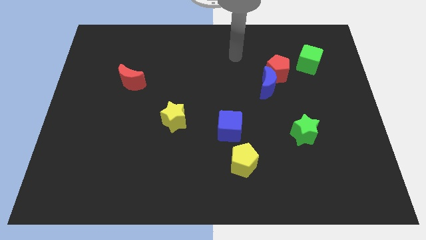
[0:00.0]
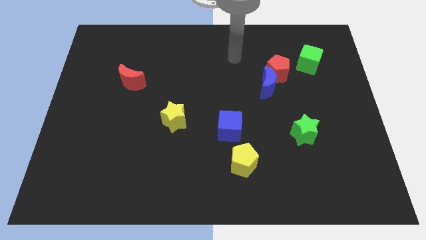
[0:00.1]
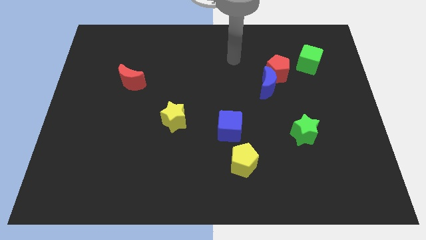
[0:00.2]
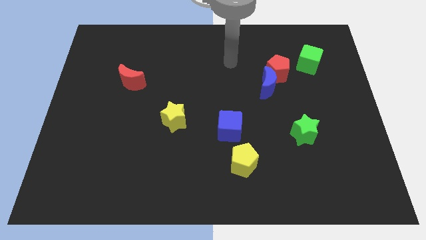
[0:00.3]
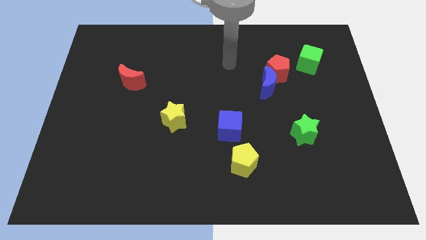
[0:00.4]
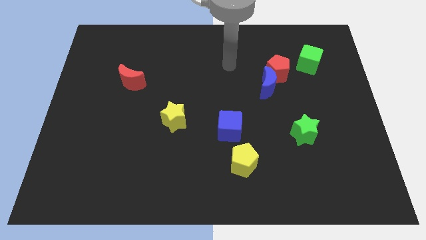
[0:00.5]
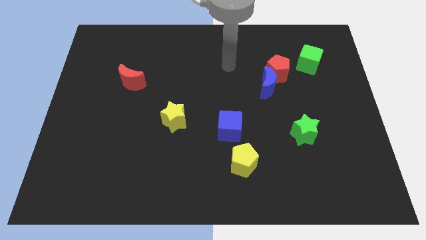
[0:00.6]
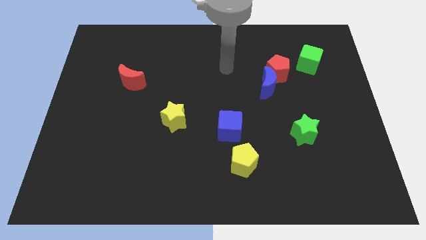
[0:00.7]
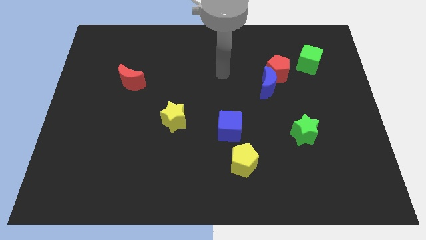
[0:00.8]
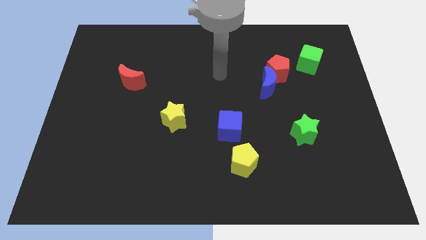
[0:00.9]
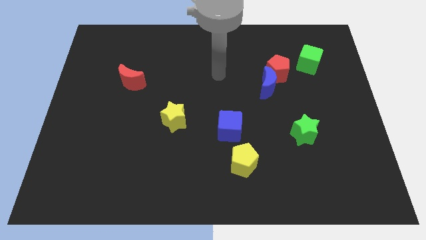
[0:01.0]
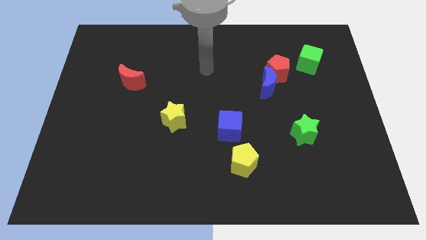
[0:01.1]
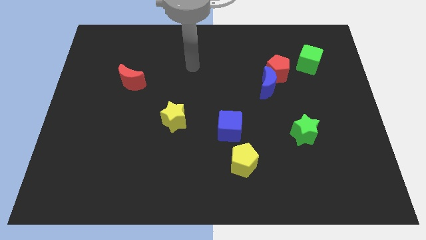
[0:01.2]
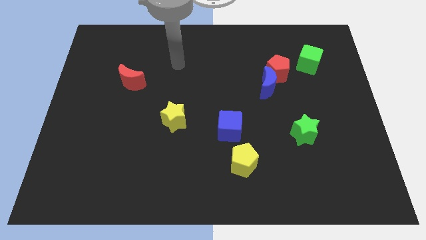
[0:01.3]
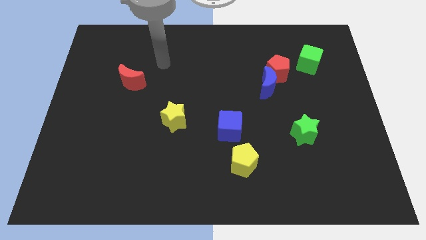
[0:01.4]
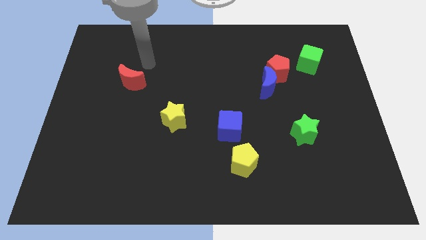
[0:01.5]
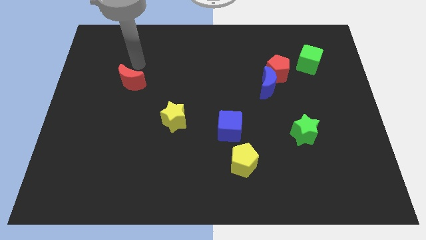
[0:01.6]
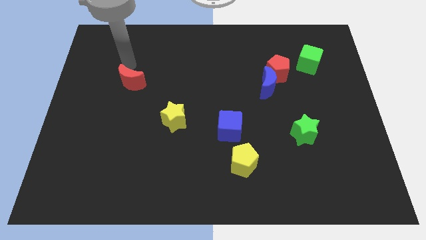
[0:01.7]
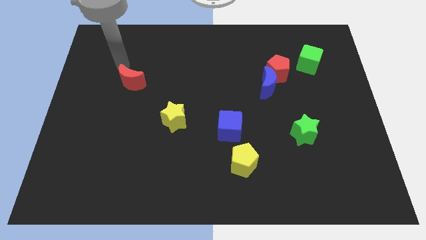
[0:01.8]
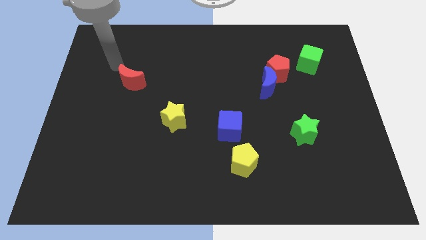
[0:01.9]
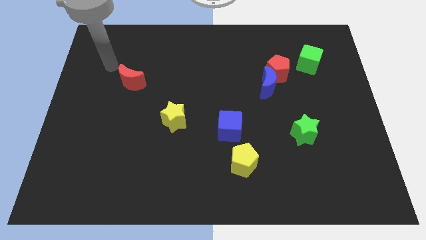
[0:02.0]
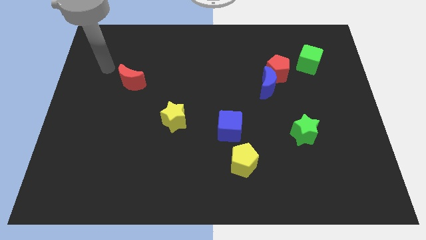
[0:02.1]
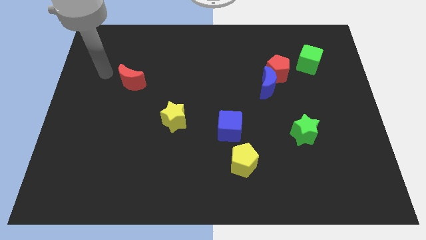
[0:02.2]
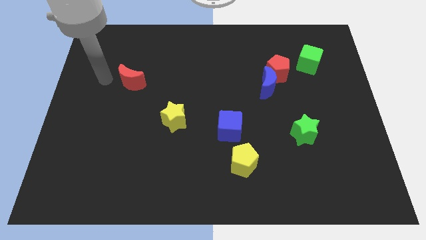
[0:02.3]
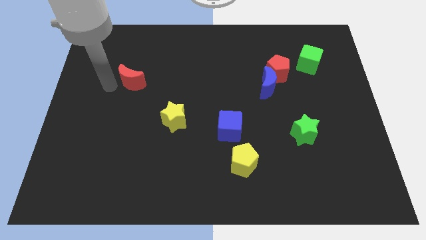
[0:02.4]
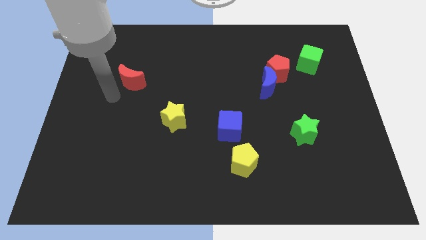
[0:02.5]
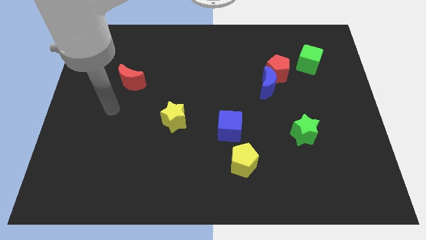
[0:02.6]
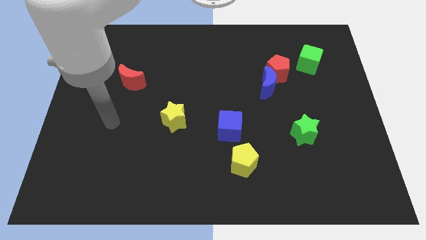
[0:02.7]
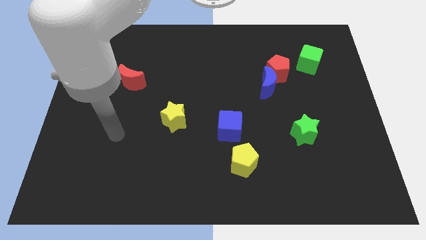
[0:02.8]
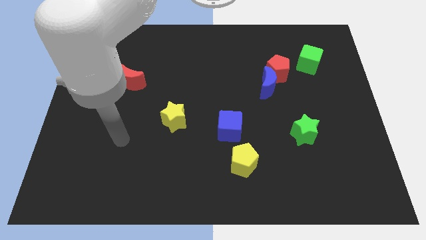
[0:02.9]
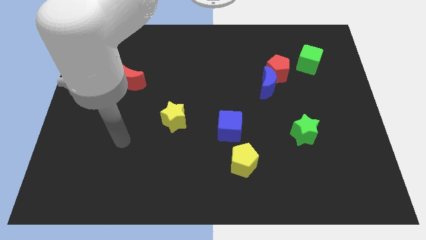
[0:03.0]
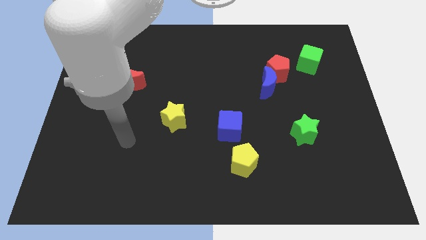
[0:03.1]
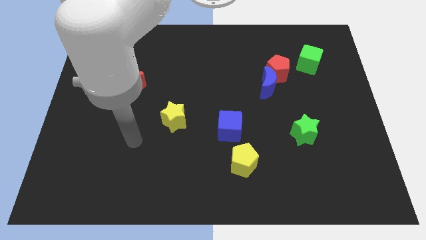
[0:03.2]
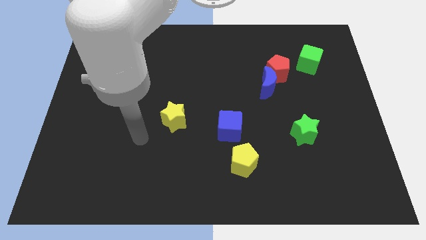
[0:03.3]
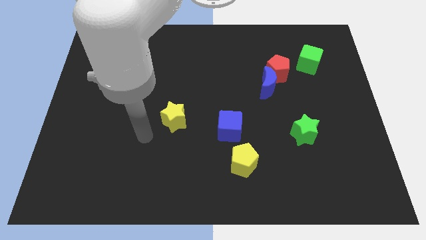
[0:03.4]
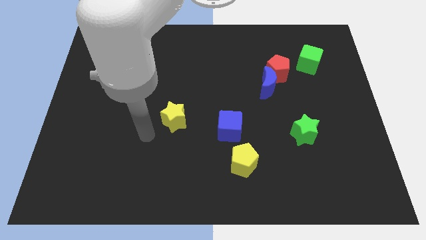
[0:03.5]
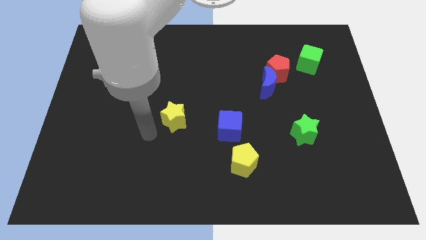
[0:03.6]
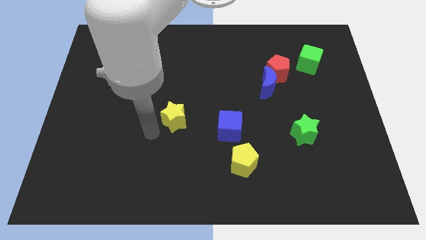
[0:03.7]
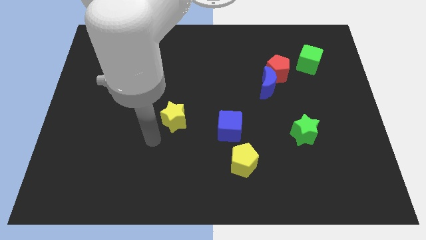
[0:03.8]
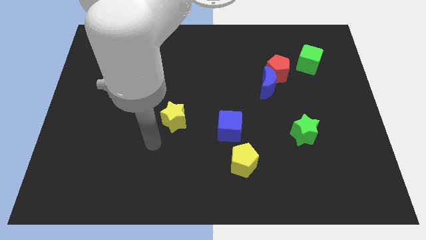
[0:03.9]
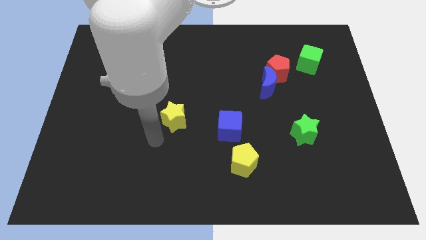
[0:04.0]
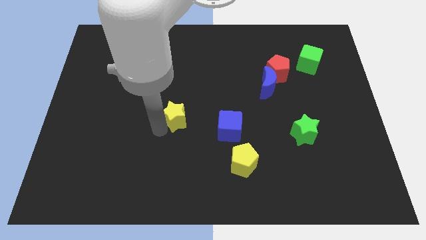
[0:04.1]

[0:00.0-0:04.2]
touch the yellow star

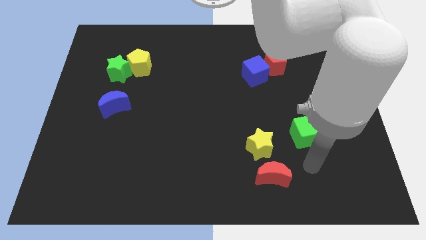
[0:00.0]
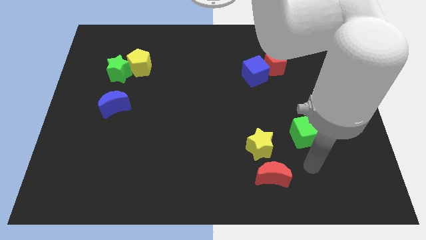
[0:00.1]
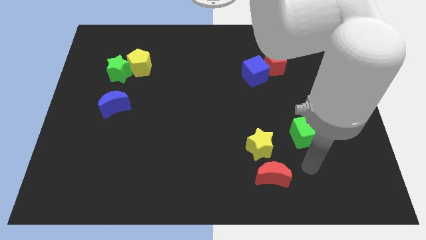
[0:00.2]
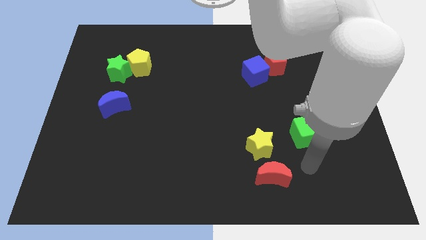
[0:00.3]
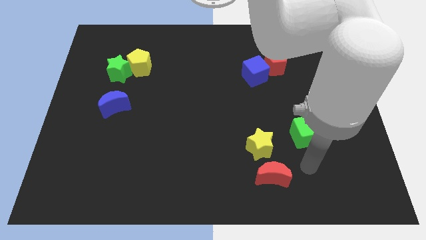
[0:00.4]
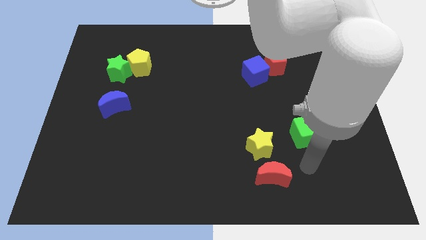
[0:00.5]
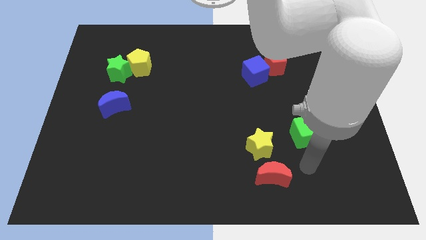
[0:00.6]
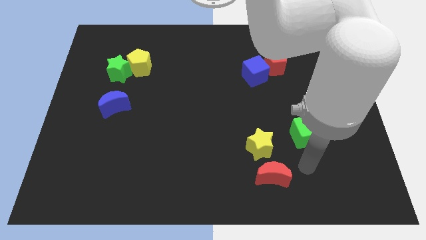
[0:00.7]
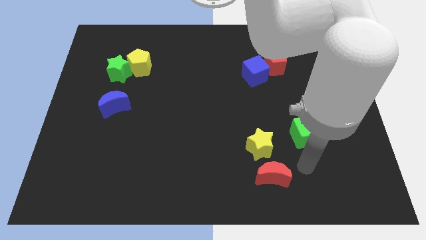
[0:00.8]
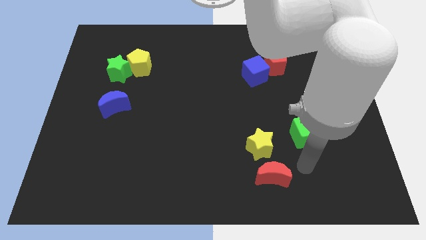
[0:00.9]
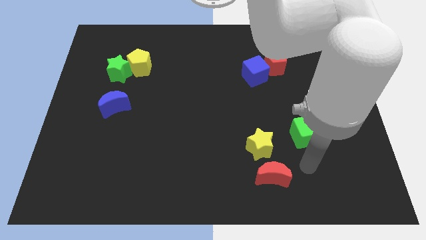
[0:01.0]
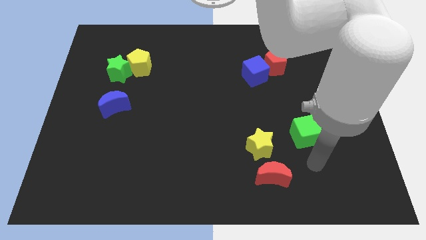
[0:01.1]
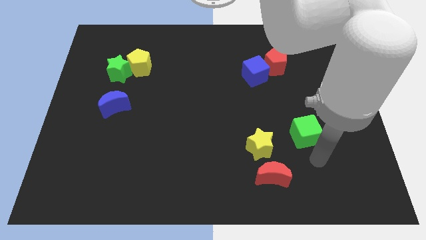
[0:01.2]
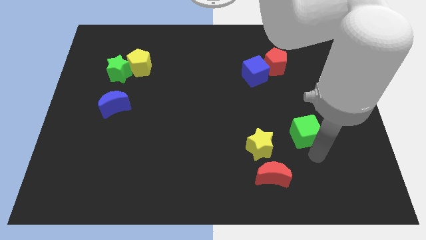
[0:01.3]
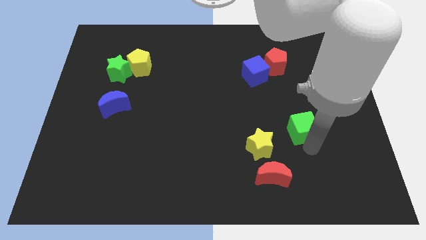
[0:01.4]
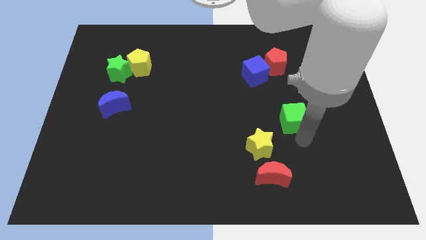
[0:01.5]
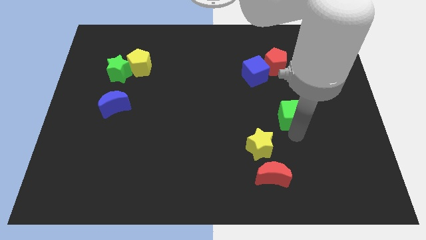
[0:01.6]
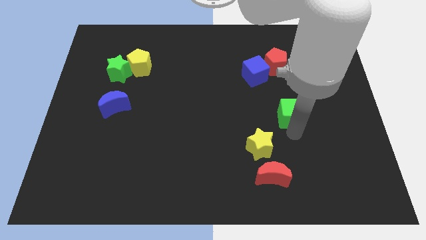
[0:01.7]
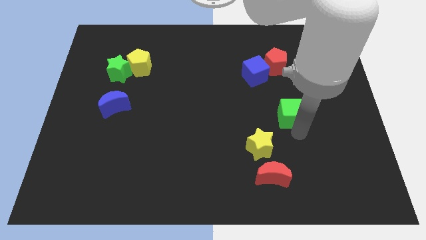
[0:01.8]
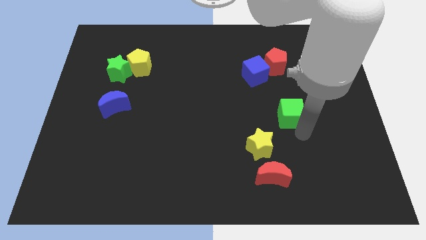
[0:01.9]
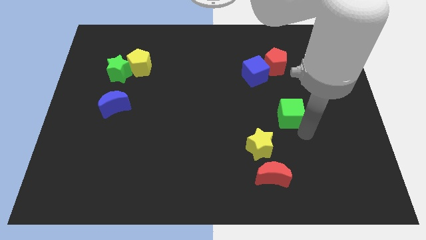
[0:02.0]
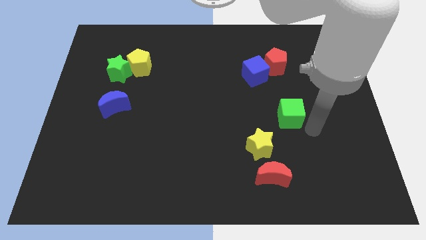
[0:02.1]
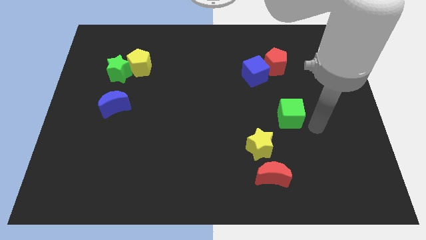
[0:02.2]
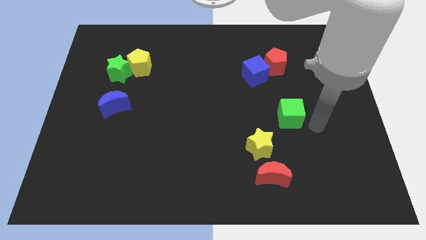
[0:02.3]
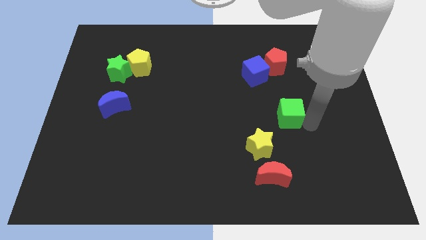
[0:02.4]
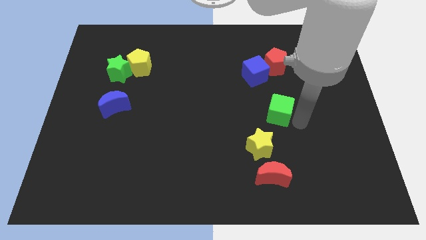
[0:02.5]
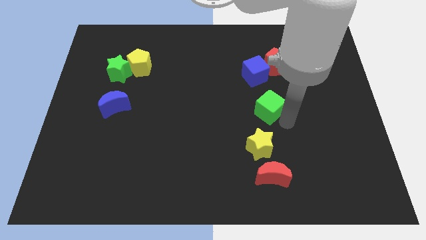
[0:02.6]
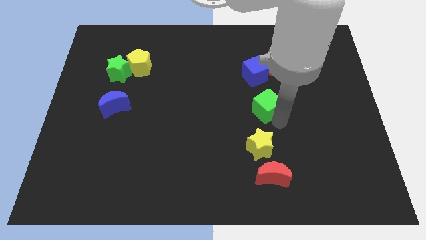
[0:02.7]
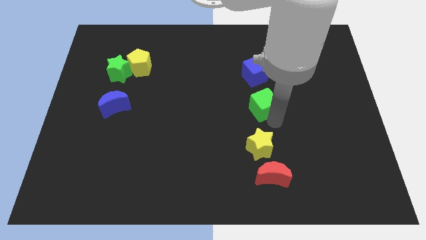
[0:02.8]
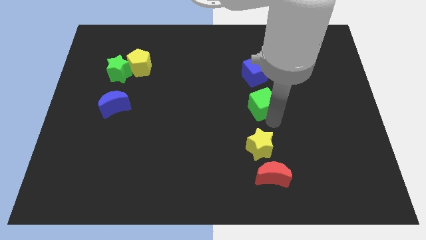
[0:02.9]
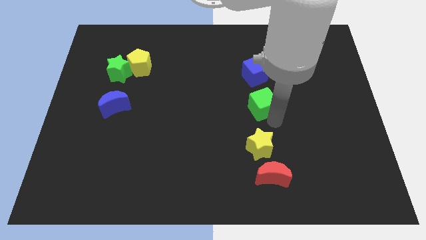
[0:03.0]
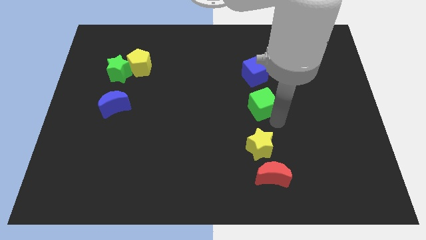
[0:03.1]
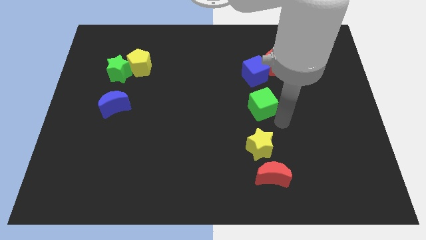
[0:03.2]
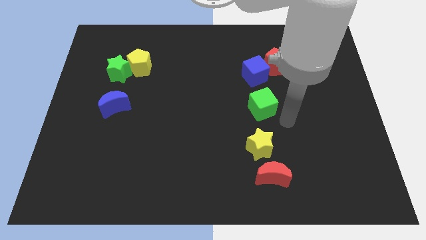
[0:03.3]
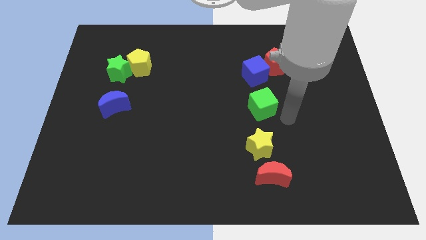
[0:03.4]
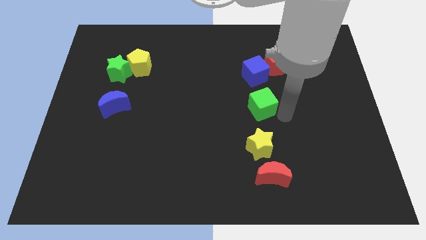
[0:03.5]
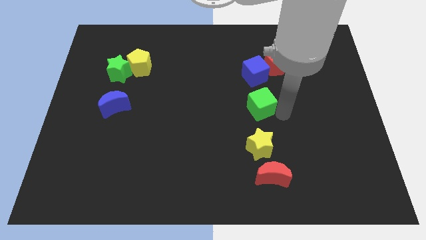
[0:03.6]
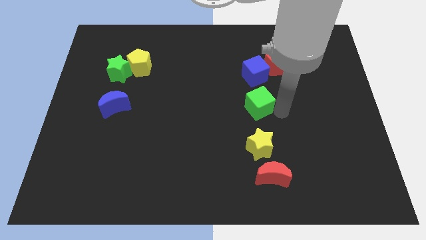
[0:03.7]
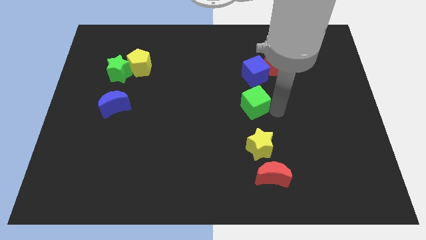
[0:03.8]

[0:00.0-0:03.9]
place the green cube in between the blue cube and the yellow star to form a vertical line

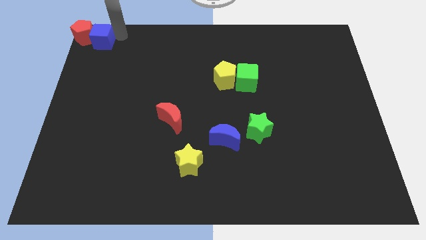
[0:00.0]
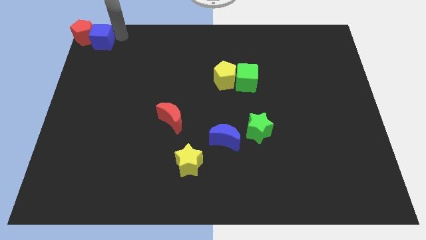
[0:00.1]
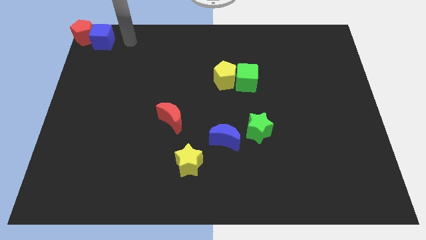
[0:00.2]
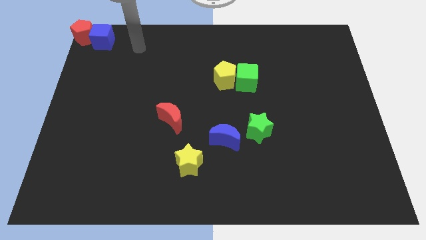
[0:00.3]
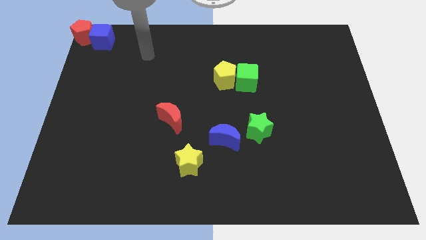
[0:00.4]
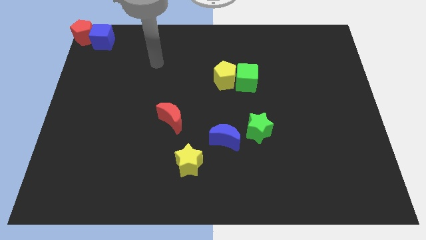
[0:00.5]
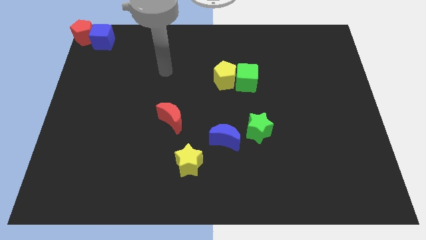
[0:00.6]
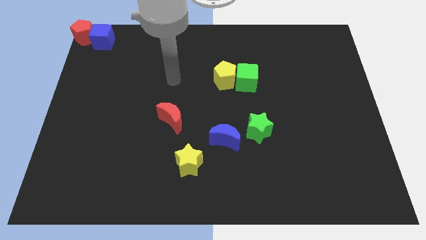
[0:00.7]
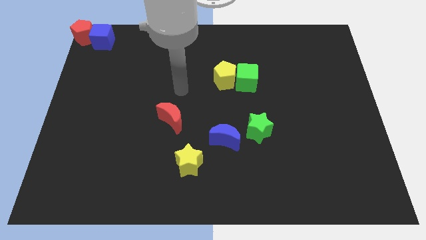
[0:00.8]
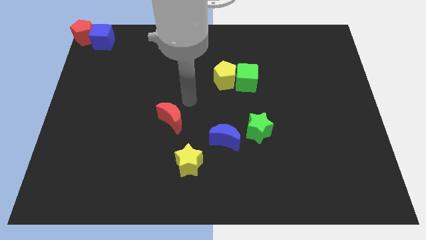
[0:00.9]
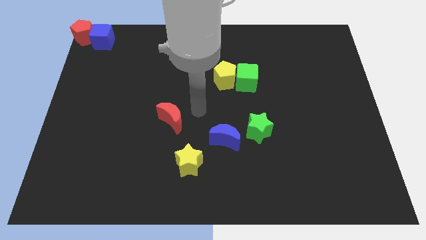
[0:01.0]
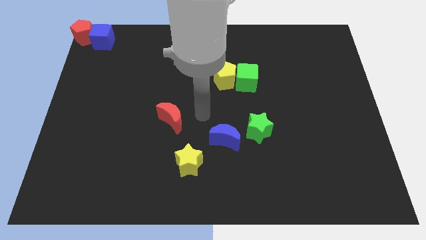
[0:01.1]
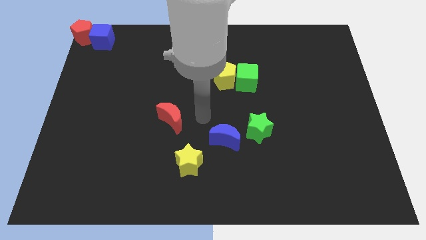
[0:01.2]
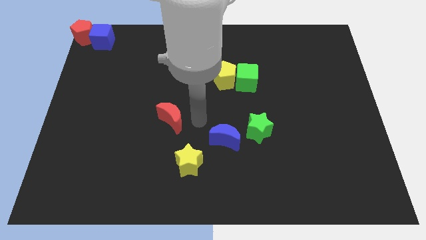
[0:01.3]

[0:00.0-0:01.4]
move the arm to the right of the red moon
